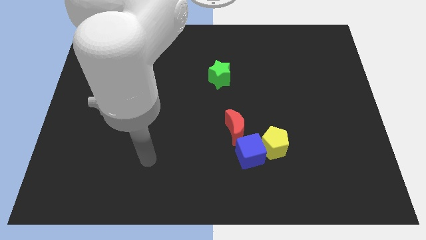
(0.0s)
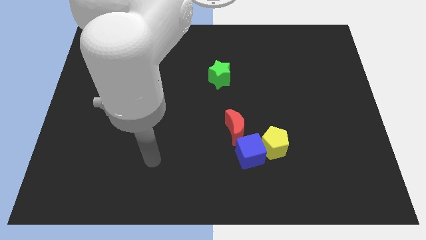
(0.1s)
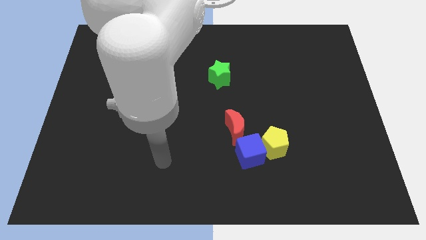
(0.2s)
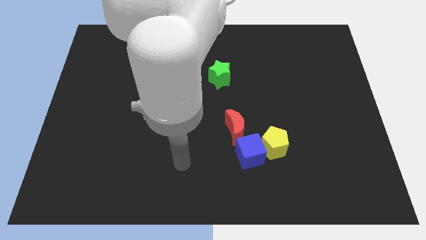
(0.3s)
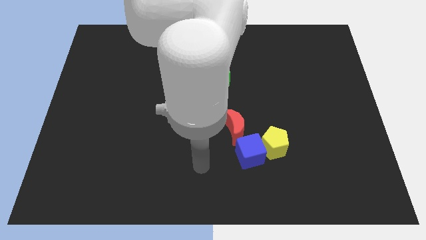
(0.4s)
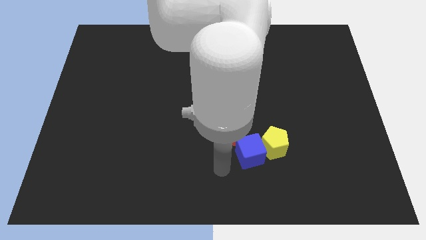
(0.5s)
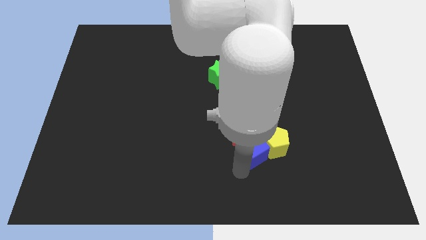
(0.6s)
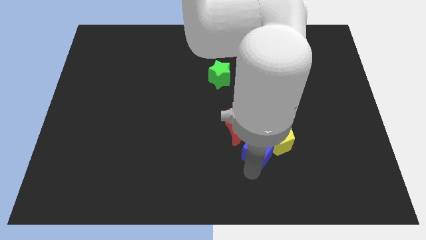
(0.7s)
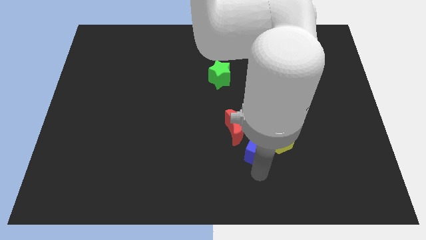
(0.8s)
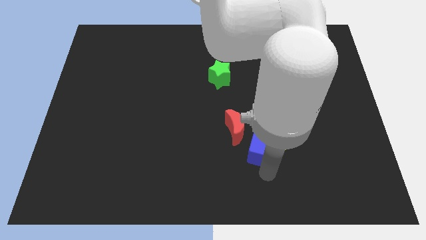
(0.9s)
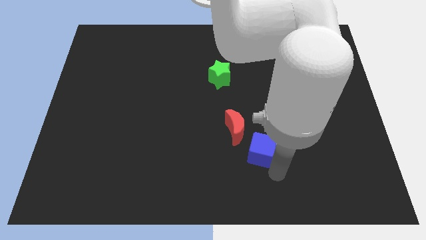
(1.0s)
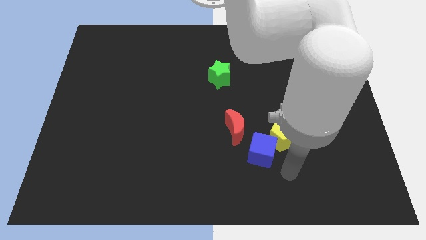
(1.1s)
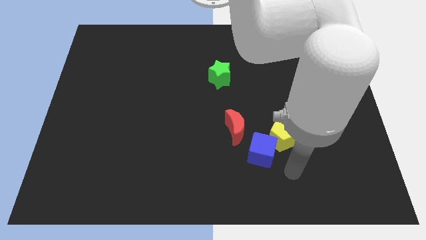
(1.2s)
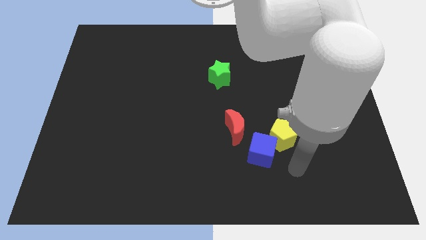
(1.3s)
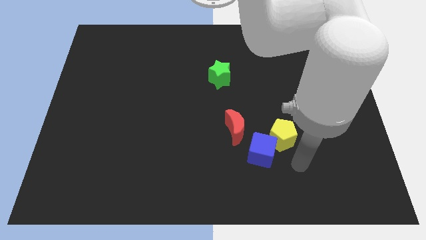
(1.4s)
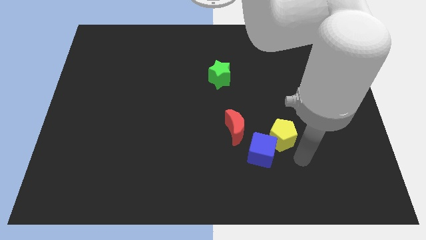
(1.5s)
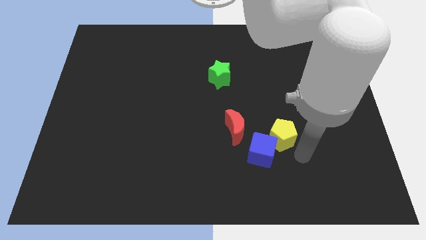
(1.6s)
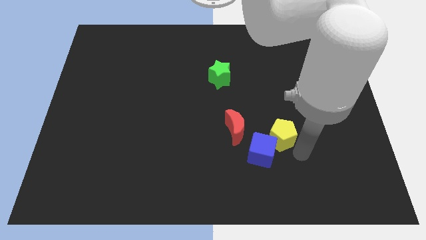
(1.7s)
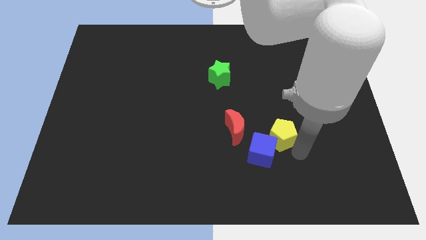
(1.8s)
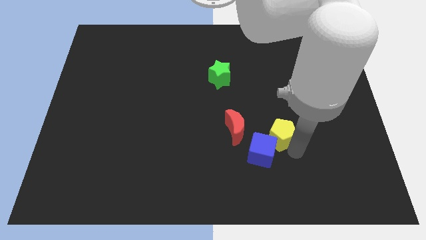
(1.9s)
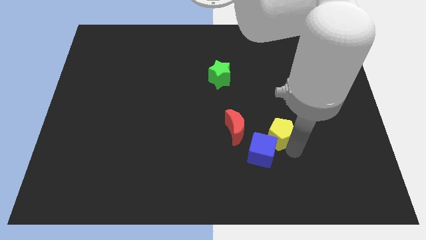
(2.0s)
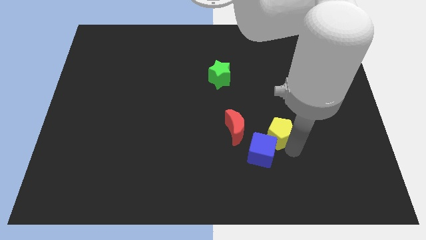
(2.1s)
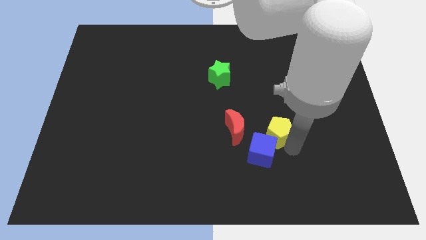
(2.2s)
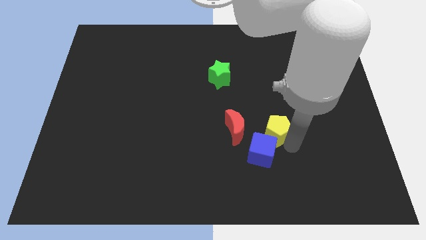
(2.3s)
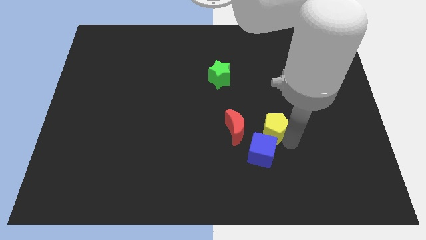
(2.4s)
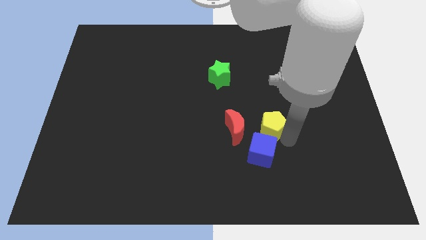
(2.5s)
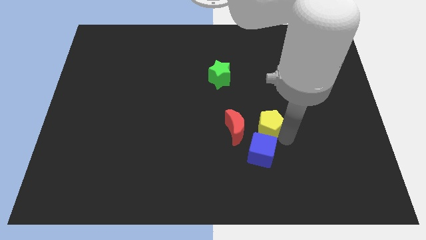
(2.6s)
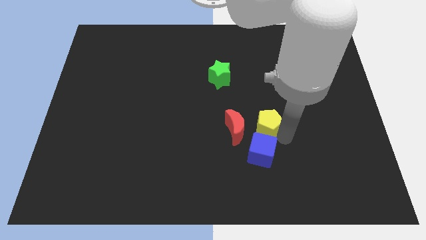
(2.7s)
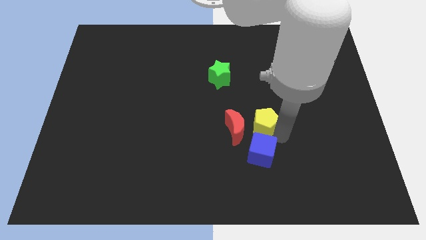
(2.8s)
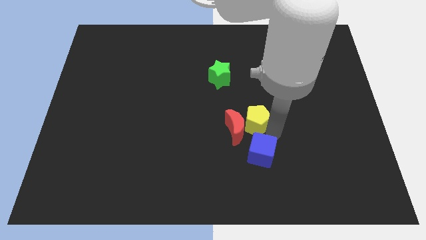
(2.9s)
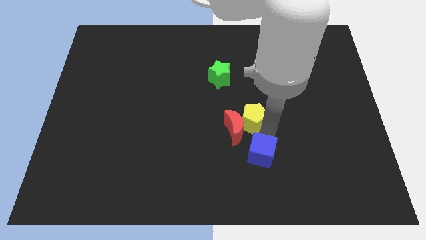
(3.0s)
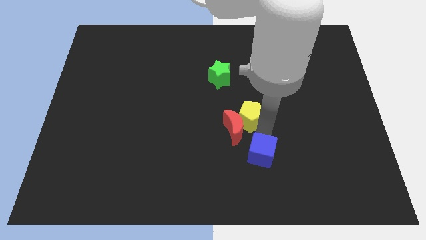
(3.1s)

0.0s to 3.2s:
push the pentagon close to the red moon

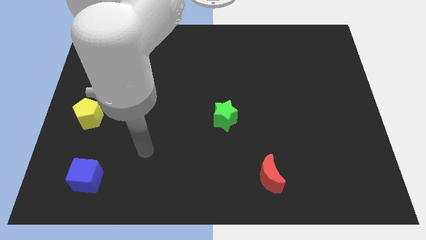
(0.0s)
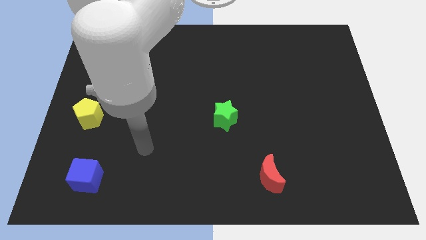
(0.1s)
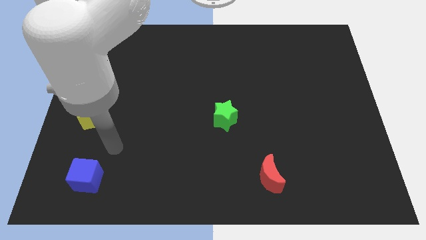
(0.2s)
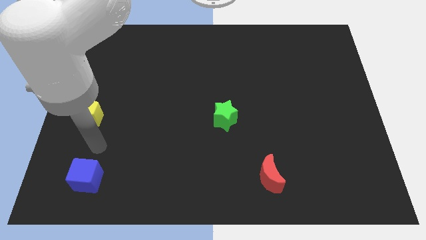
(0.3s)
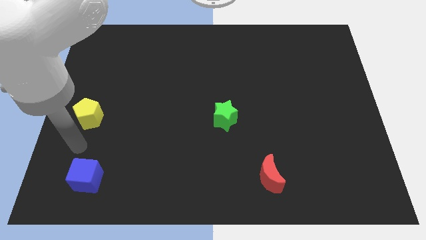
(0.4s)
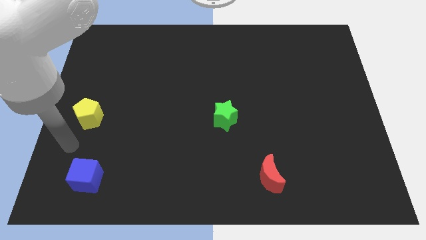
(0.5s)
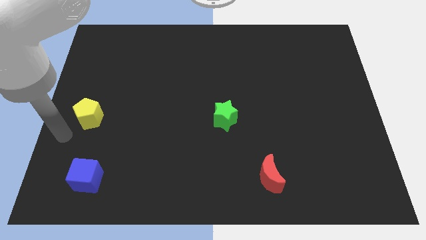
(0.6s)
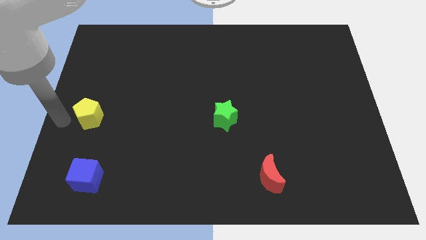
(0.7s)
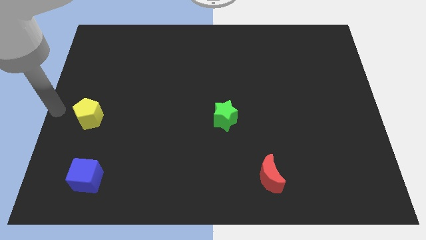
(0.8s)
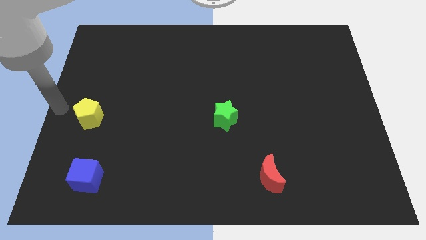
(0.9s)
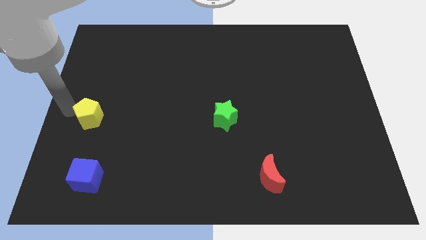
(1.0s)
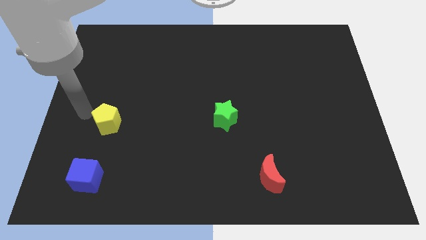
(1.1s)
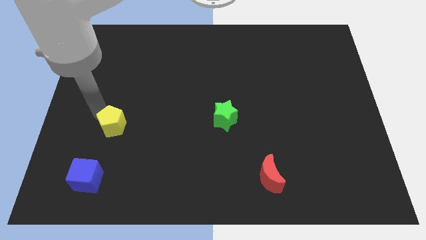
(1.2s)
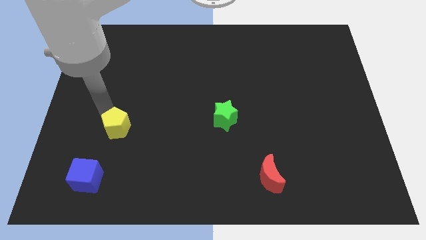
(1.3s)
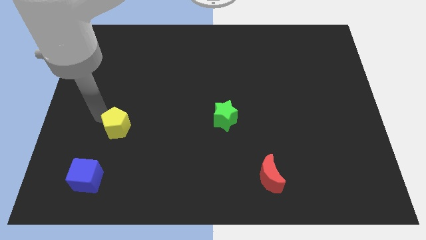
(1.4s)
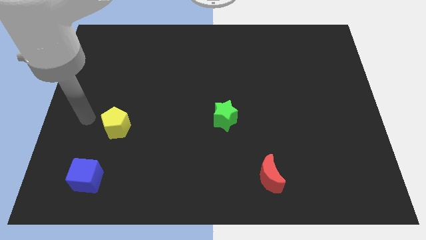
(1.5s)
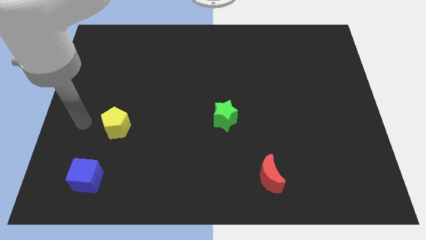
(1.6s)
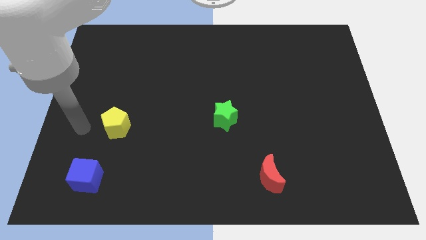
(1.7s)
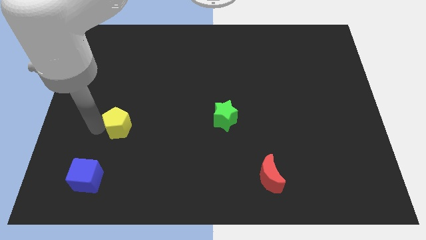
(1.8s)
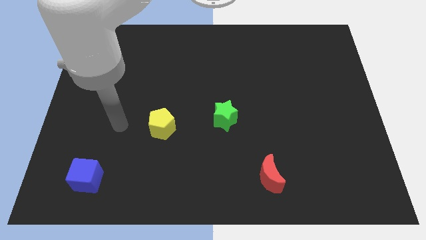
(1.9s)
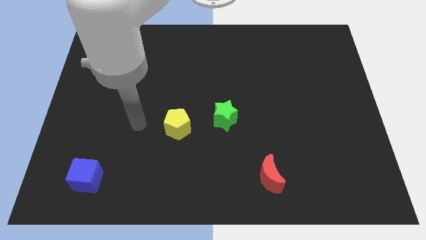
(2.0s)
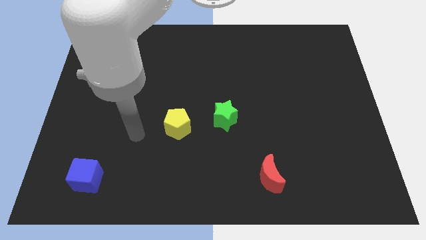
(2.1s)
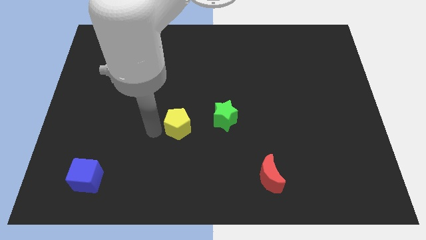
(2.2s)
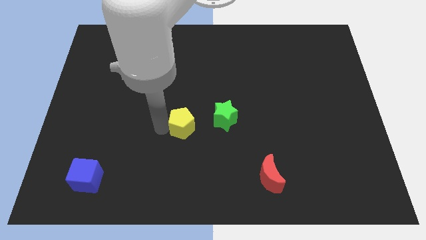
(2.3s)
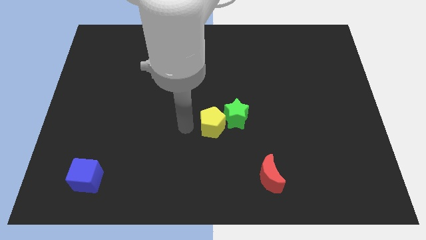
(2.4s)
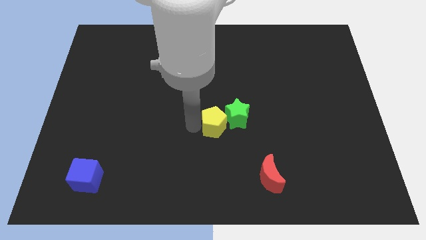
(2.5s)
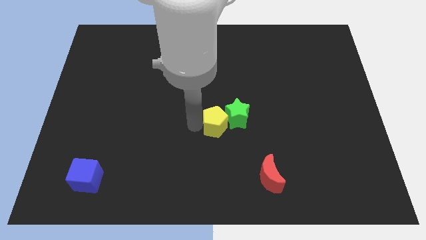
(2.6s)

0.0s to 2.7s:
slide the yellow block next to the green block

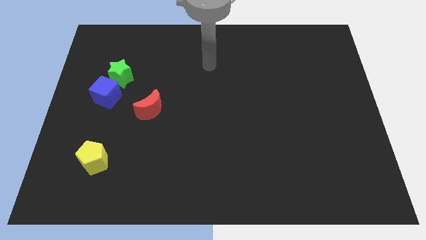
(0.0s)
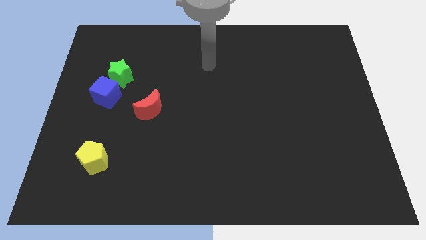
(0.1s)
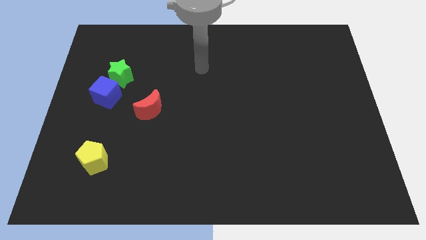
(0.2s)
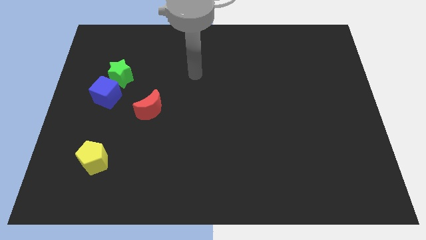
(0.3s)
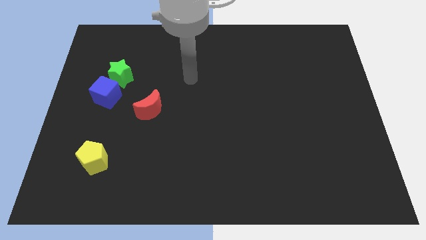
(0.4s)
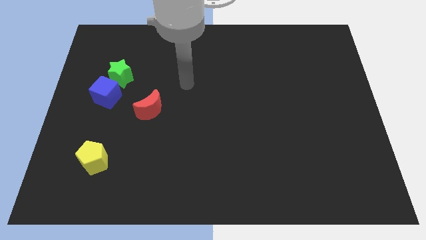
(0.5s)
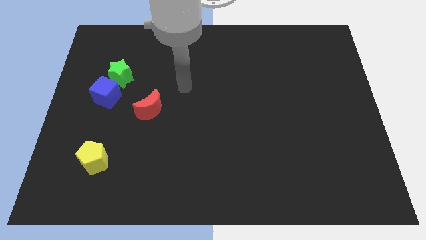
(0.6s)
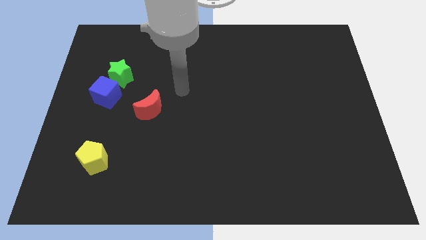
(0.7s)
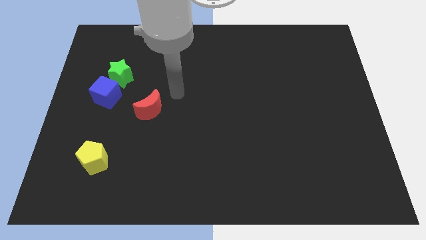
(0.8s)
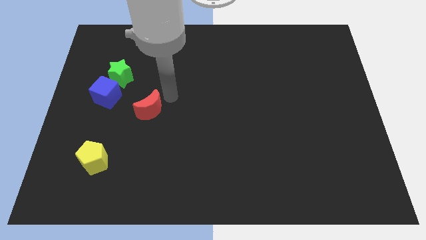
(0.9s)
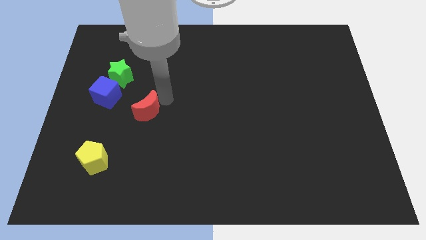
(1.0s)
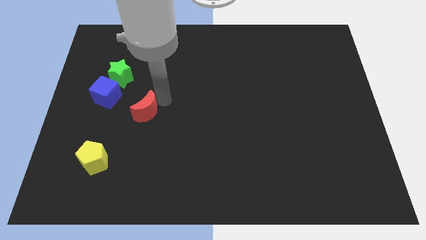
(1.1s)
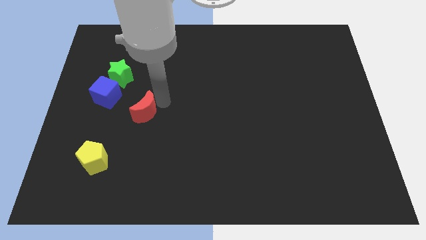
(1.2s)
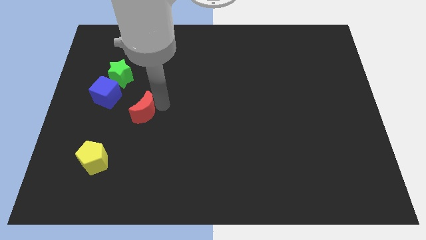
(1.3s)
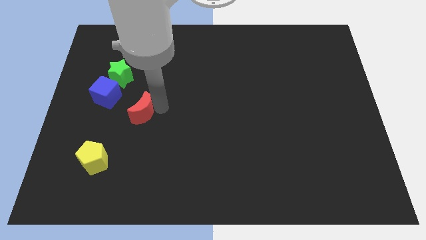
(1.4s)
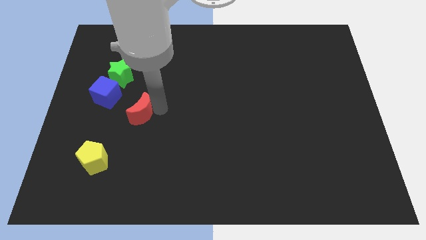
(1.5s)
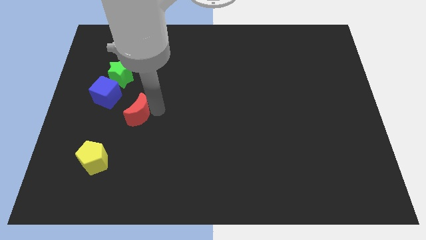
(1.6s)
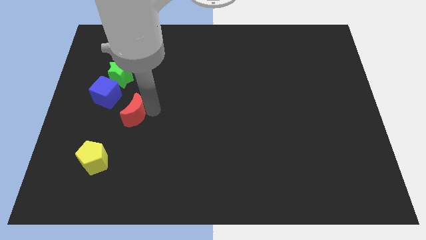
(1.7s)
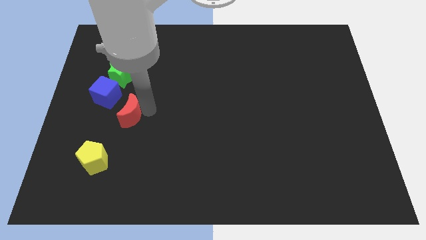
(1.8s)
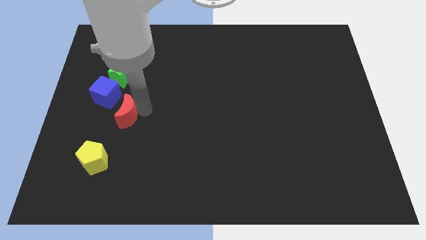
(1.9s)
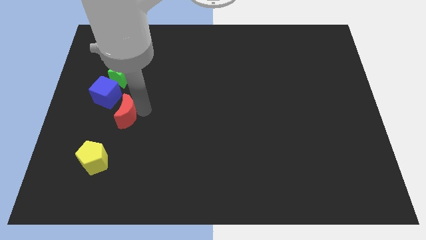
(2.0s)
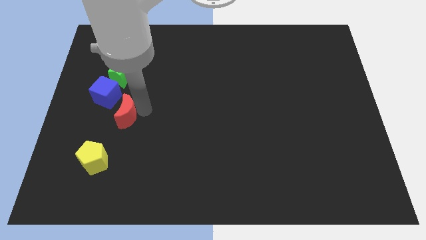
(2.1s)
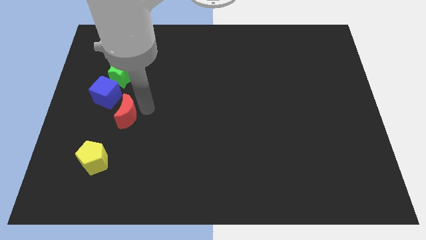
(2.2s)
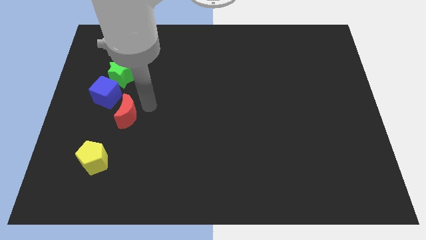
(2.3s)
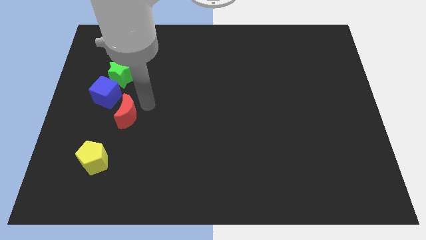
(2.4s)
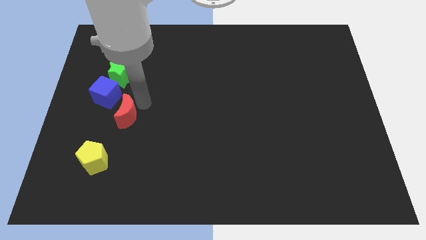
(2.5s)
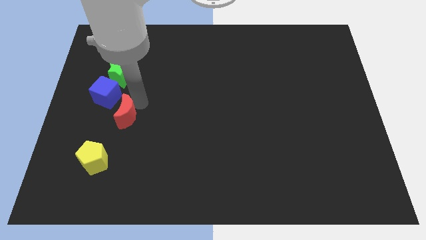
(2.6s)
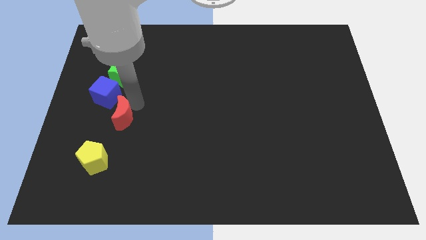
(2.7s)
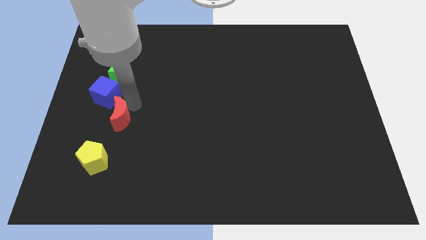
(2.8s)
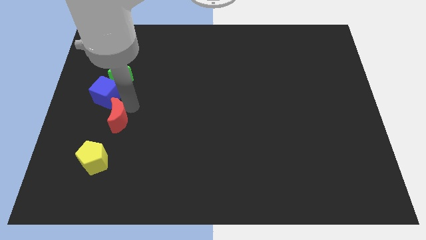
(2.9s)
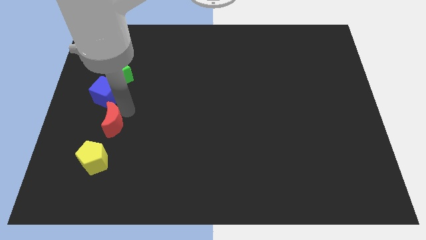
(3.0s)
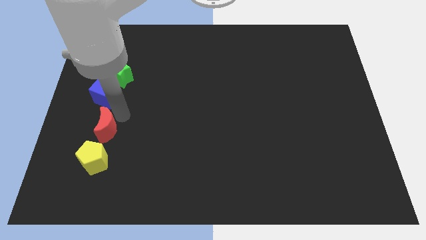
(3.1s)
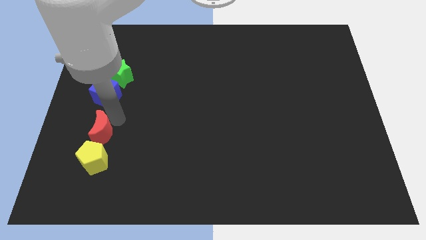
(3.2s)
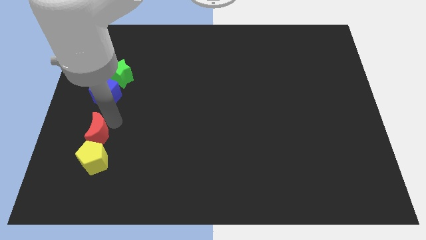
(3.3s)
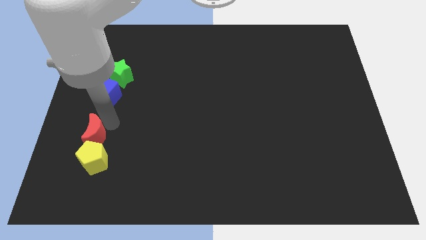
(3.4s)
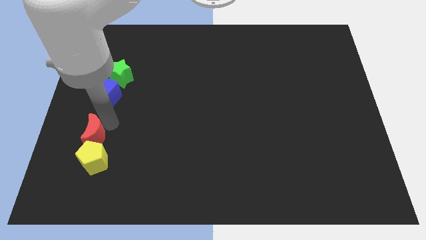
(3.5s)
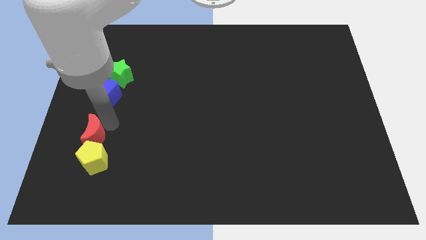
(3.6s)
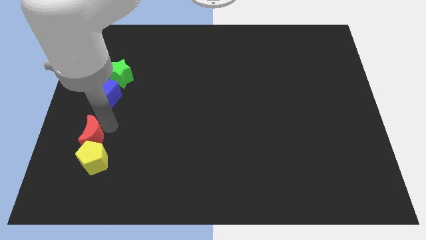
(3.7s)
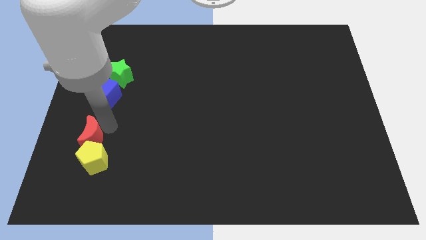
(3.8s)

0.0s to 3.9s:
push the moon to the pentagon
